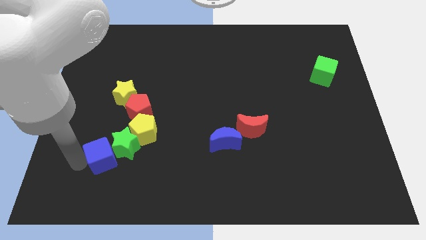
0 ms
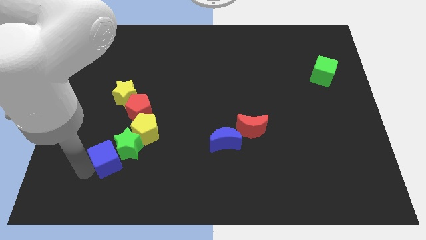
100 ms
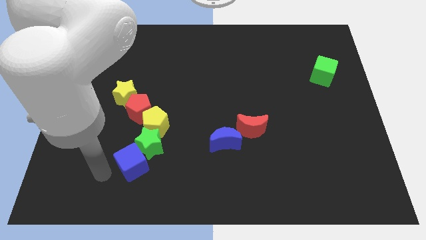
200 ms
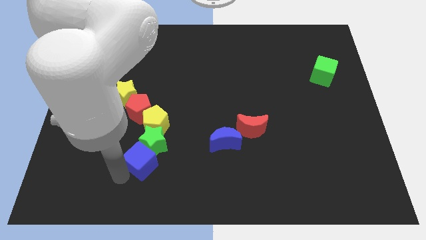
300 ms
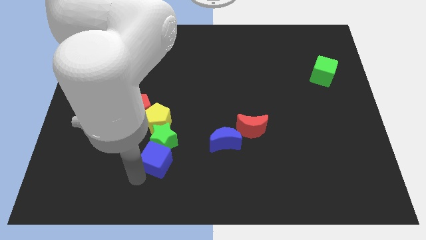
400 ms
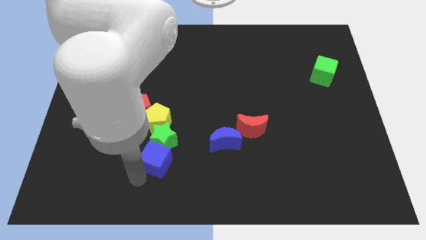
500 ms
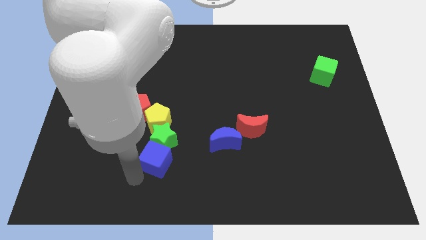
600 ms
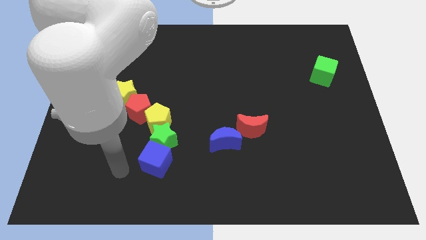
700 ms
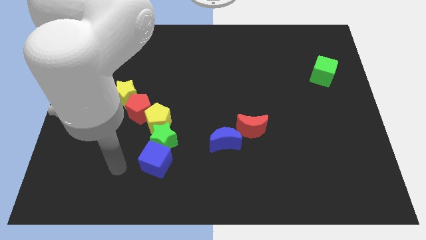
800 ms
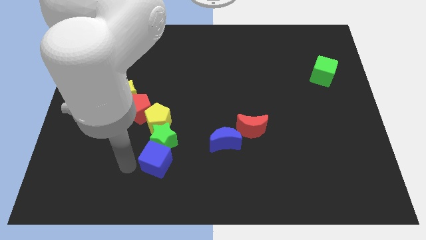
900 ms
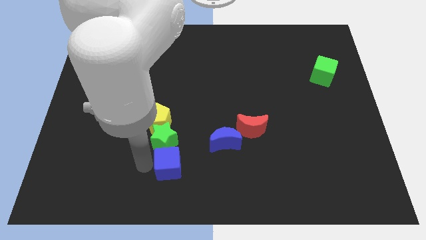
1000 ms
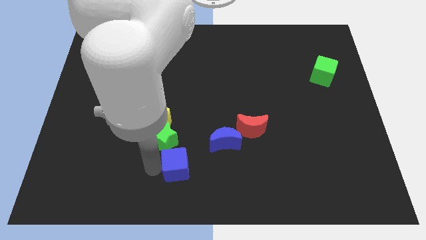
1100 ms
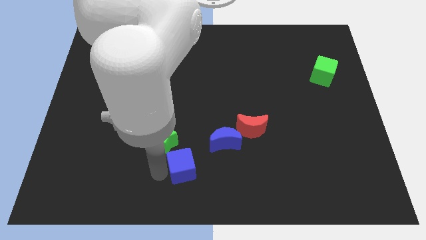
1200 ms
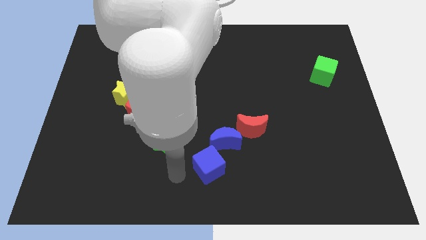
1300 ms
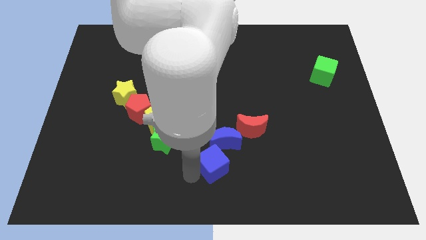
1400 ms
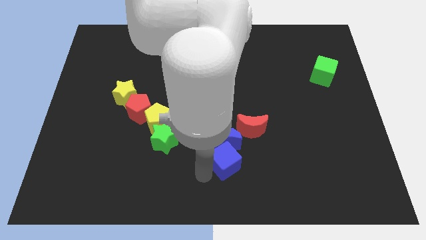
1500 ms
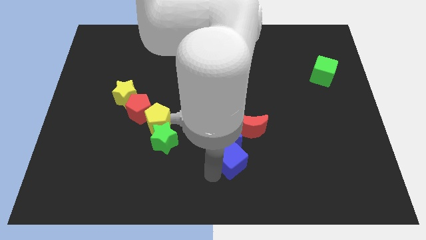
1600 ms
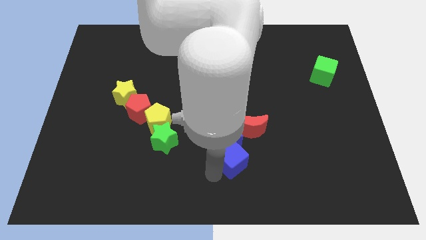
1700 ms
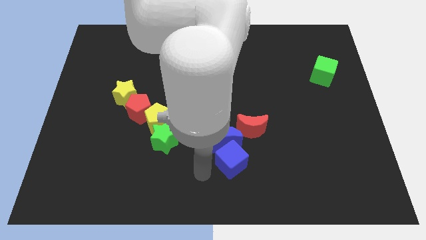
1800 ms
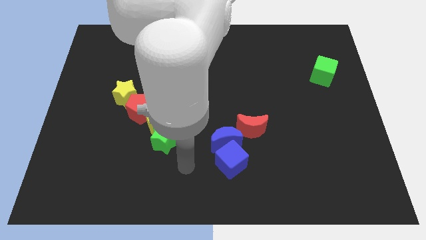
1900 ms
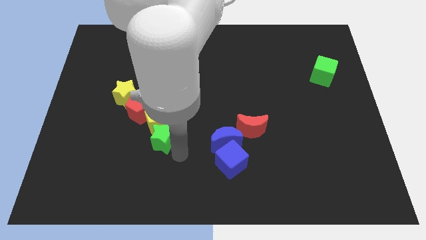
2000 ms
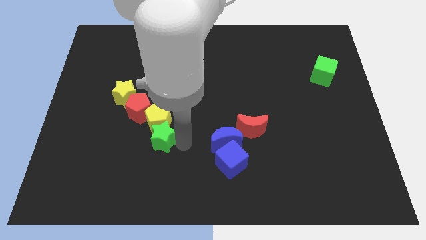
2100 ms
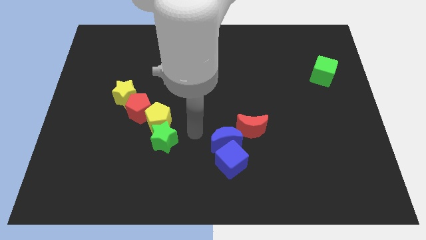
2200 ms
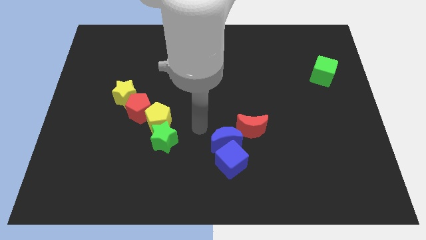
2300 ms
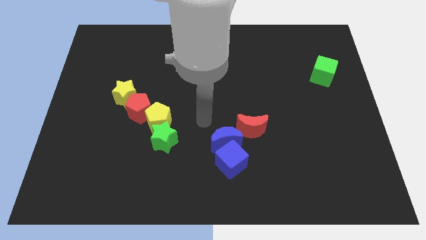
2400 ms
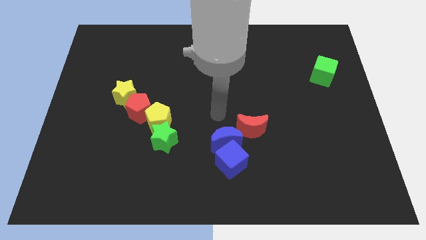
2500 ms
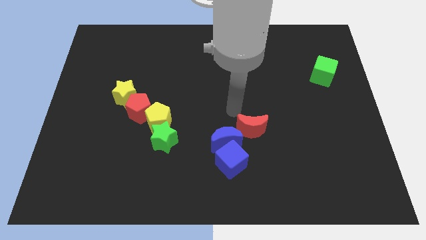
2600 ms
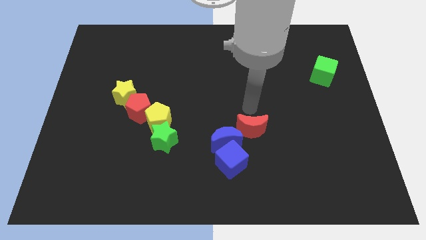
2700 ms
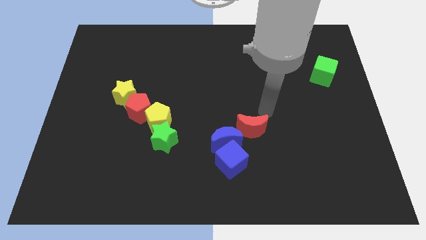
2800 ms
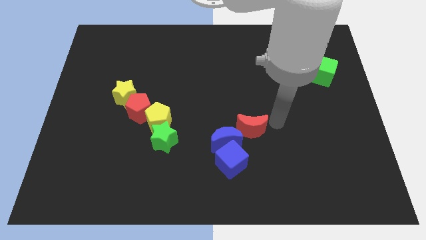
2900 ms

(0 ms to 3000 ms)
push the blue cube to the bottom of the blue crescent

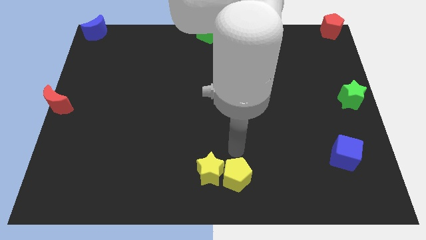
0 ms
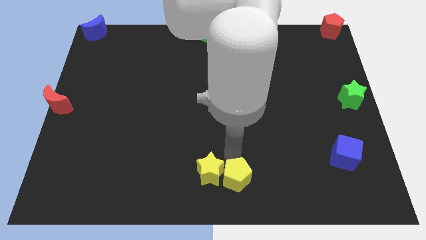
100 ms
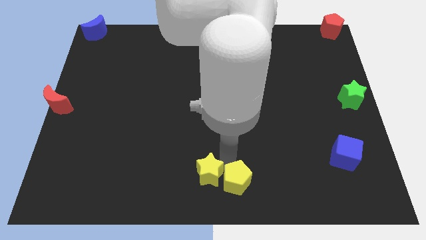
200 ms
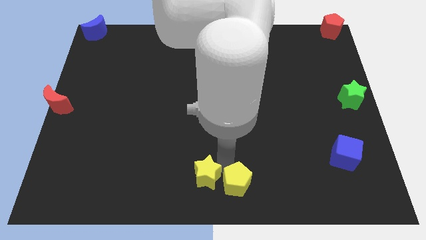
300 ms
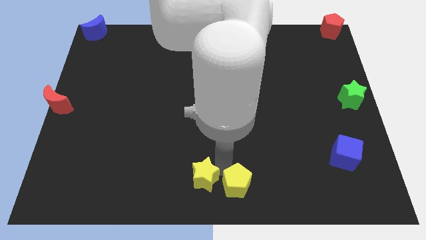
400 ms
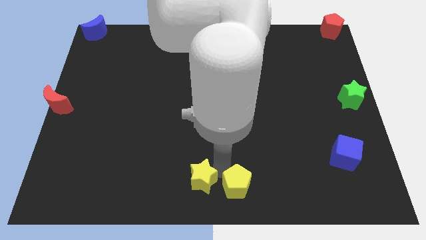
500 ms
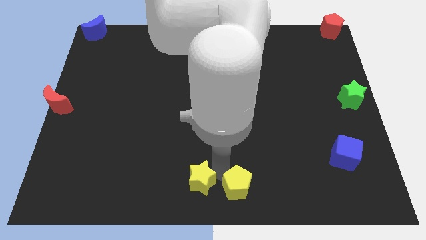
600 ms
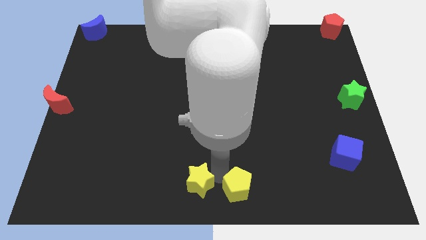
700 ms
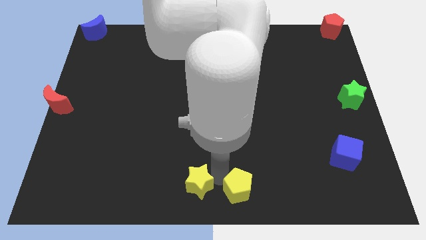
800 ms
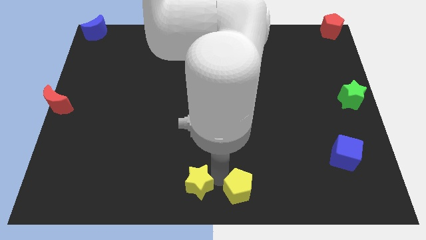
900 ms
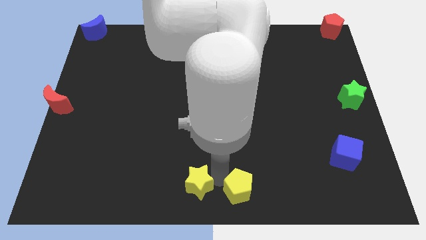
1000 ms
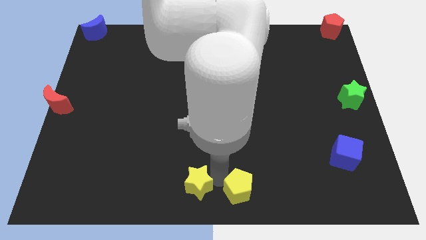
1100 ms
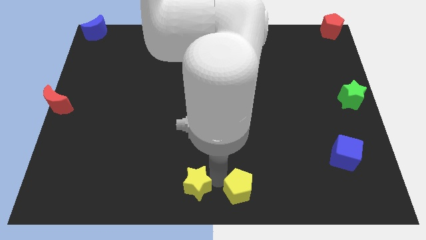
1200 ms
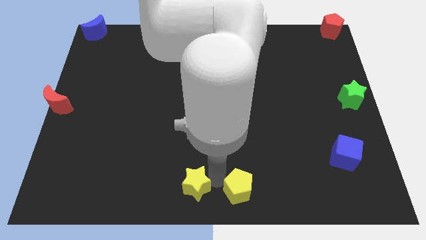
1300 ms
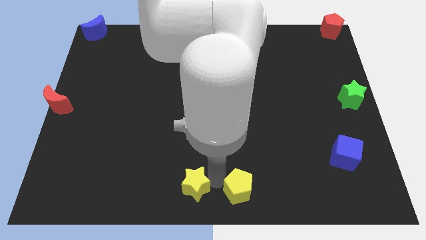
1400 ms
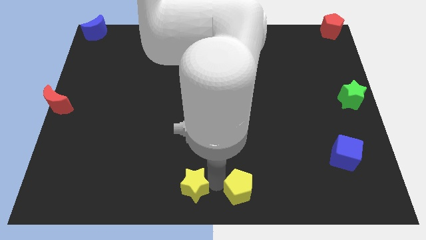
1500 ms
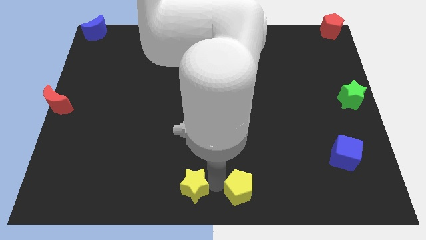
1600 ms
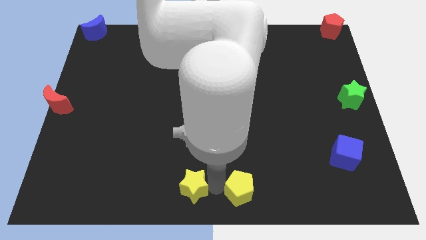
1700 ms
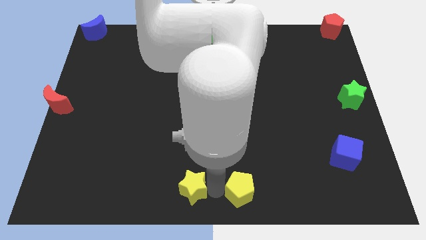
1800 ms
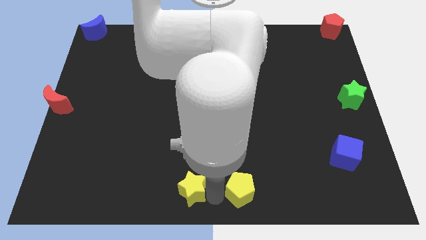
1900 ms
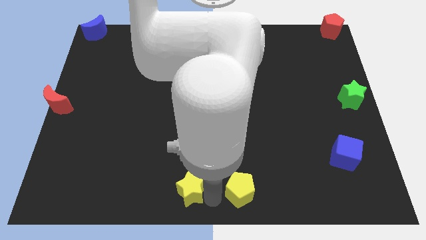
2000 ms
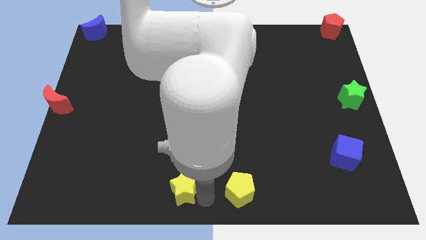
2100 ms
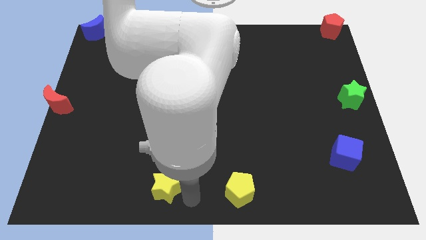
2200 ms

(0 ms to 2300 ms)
separate the yellow blocks from each others

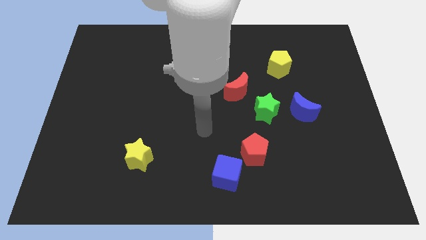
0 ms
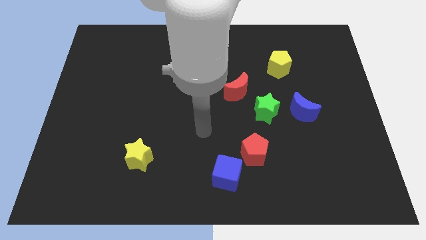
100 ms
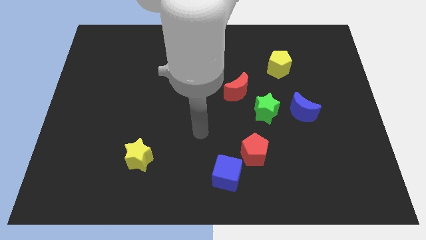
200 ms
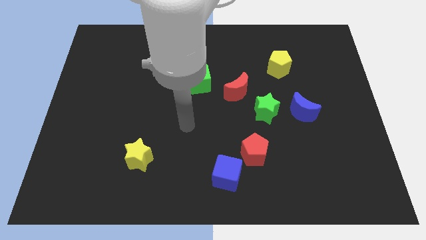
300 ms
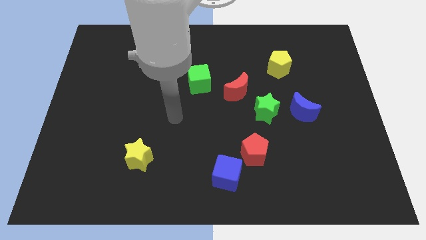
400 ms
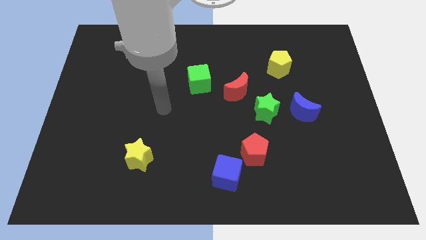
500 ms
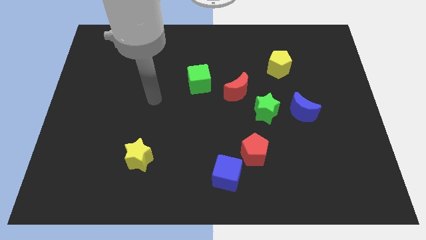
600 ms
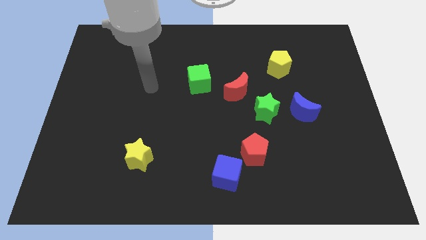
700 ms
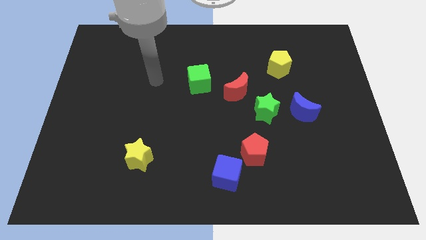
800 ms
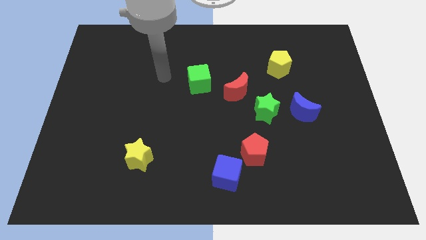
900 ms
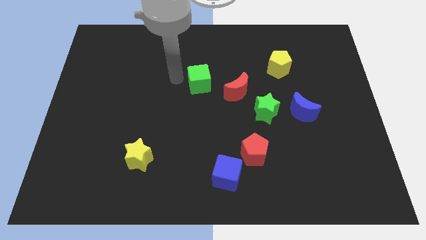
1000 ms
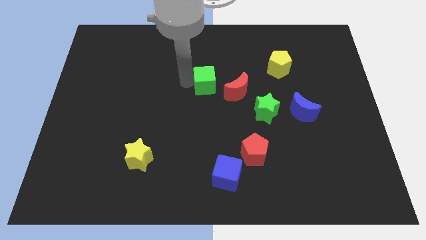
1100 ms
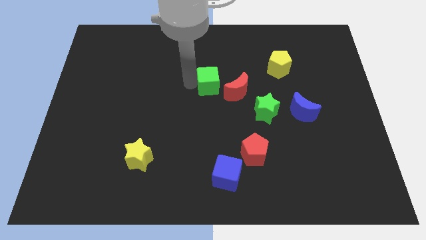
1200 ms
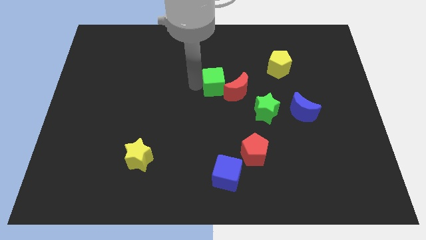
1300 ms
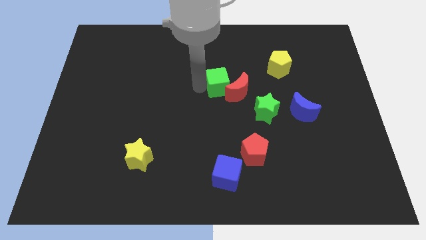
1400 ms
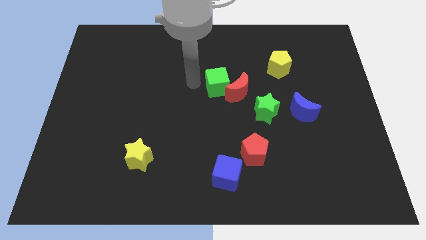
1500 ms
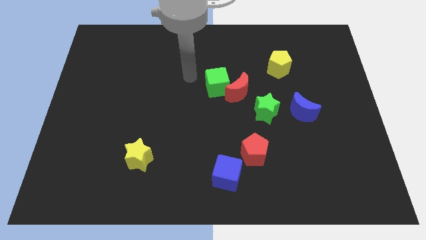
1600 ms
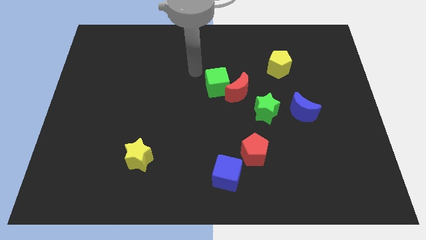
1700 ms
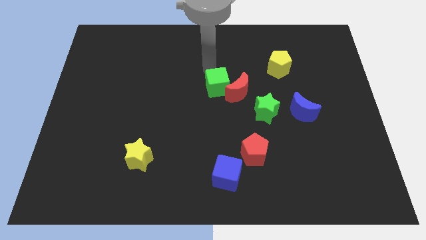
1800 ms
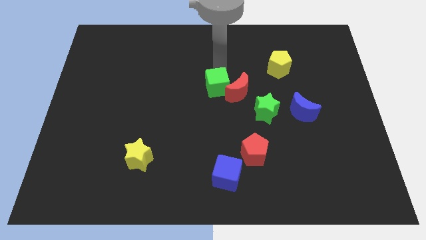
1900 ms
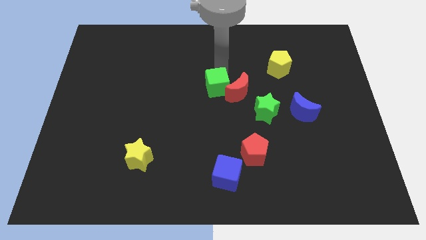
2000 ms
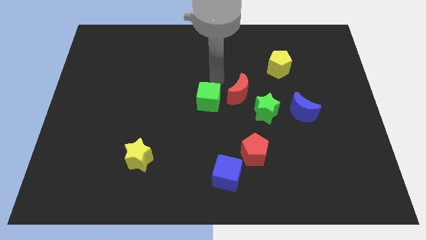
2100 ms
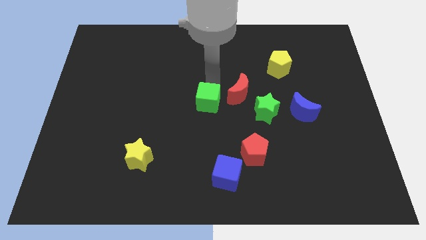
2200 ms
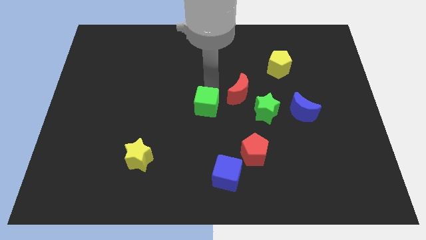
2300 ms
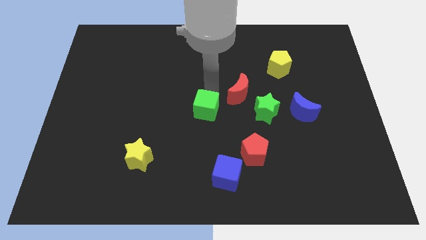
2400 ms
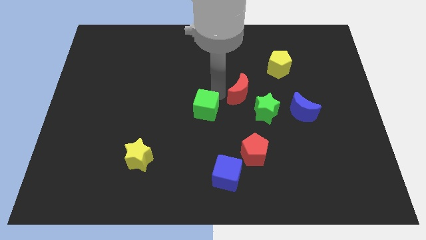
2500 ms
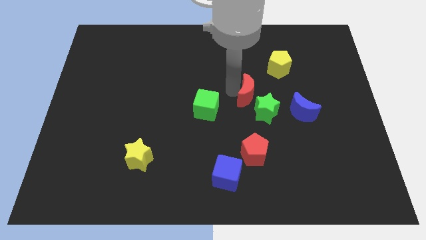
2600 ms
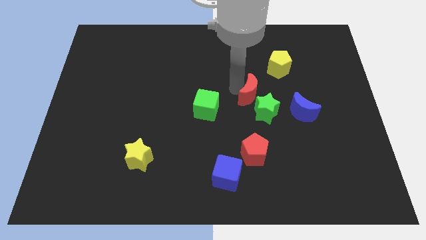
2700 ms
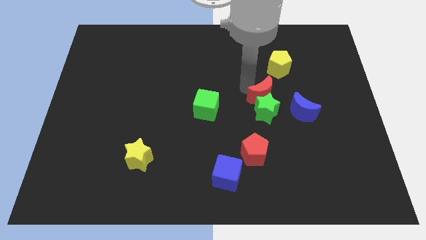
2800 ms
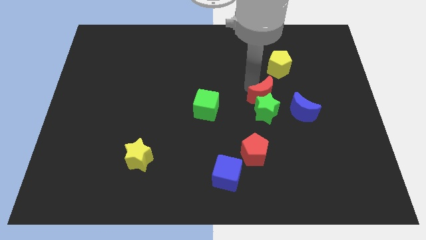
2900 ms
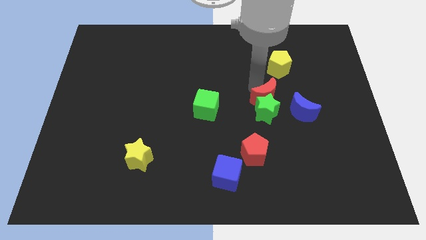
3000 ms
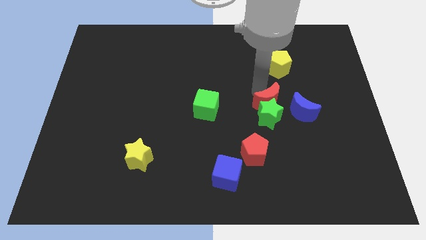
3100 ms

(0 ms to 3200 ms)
push red crescent above green star

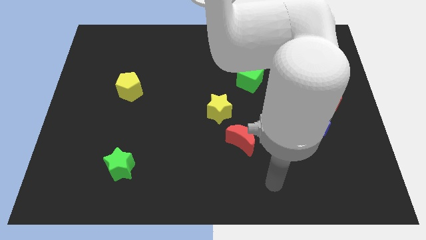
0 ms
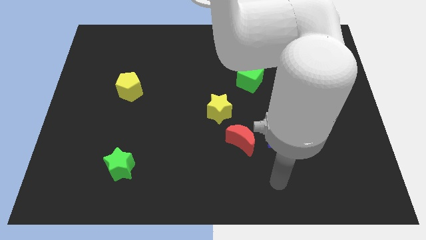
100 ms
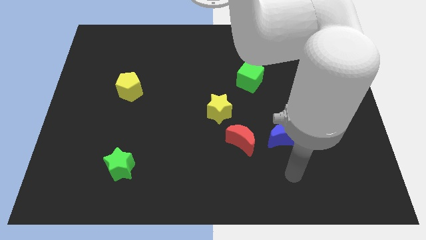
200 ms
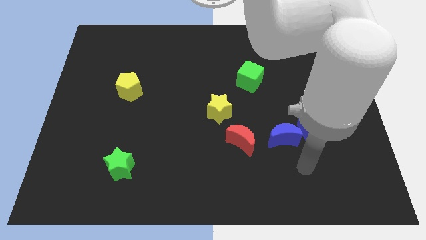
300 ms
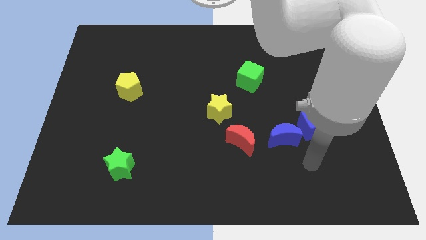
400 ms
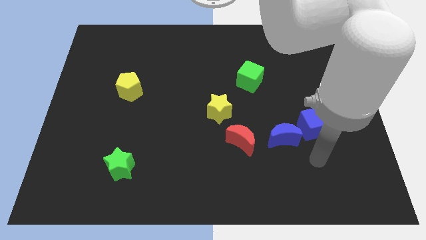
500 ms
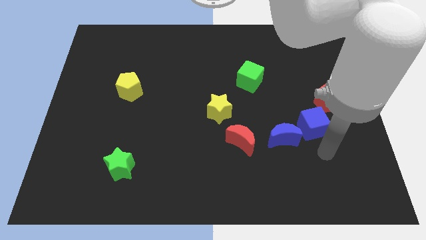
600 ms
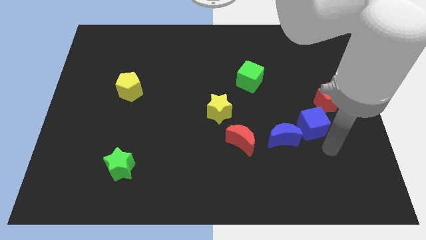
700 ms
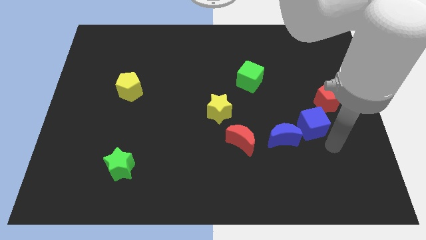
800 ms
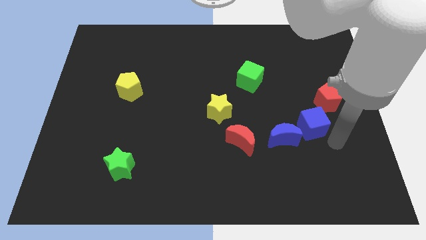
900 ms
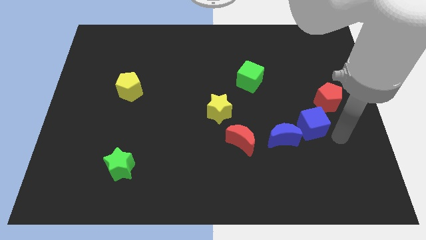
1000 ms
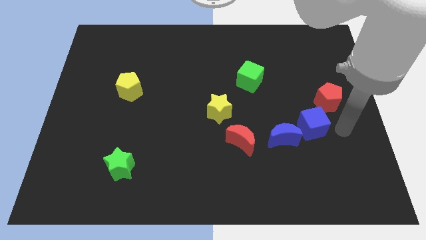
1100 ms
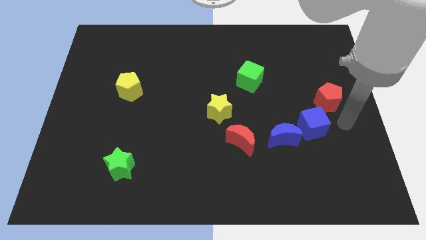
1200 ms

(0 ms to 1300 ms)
point at the right side of the blue cube
